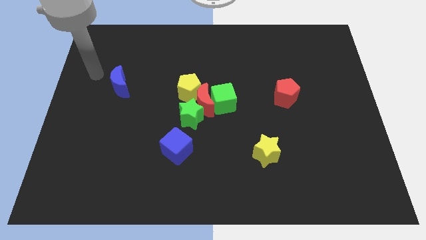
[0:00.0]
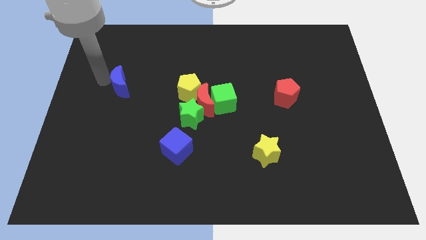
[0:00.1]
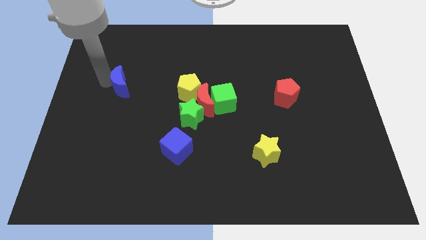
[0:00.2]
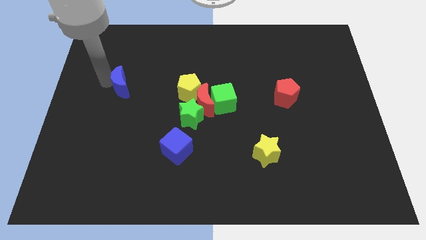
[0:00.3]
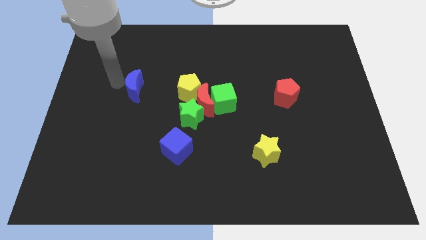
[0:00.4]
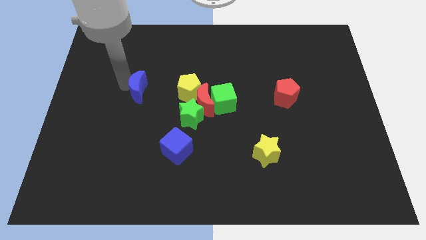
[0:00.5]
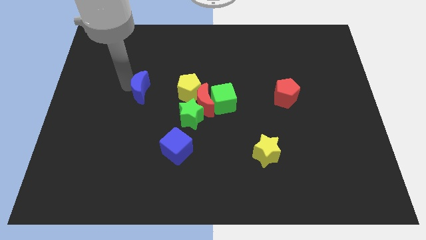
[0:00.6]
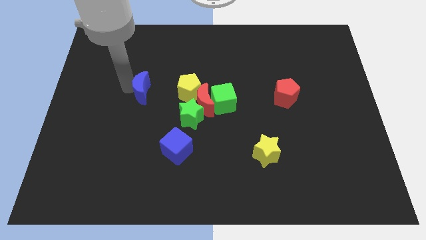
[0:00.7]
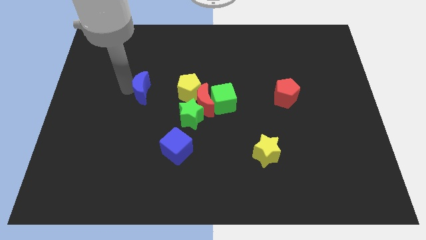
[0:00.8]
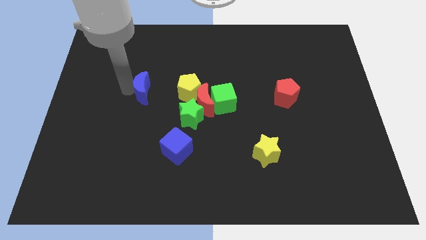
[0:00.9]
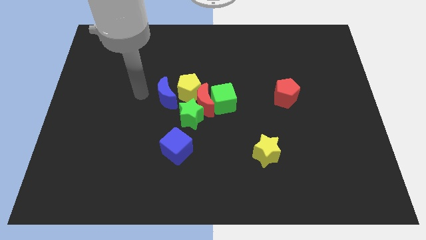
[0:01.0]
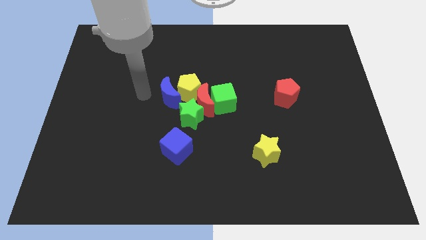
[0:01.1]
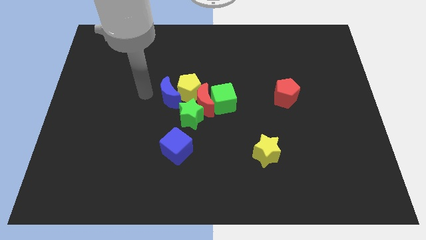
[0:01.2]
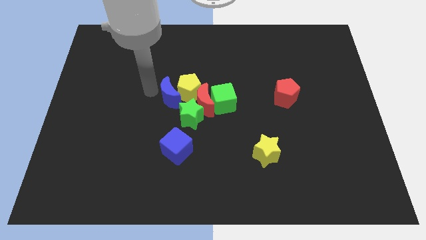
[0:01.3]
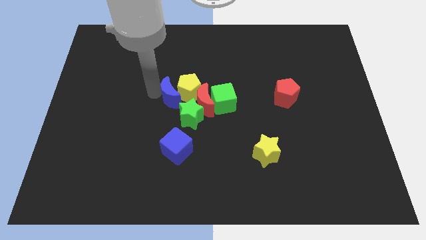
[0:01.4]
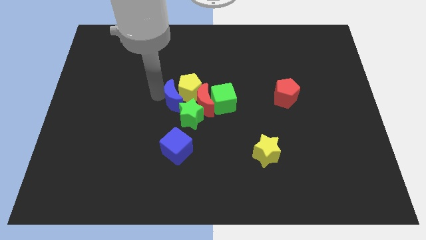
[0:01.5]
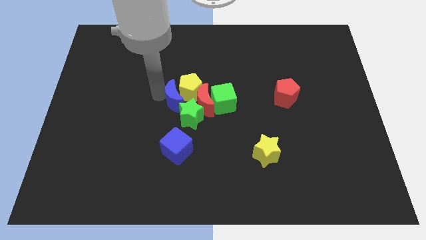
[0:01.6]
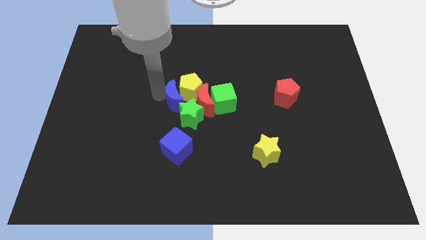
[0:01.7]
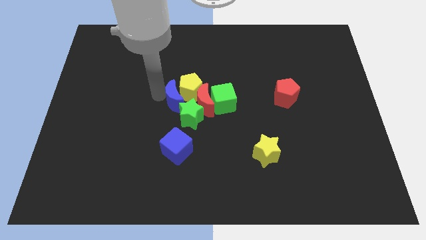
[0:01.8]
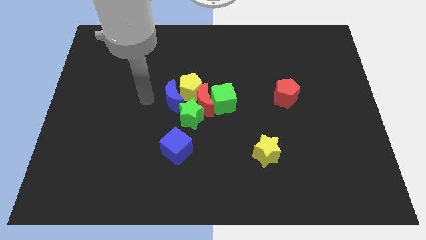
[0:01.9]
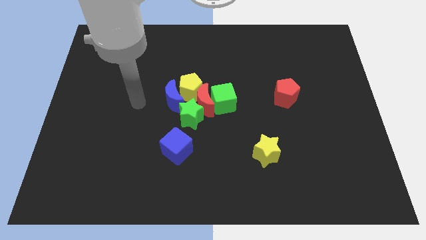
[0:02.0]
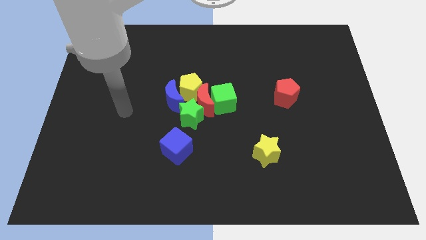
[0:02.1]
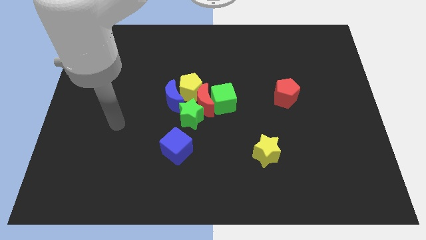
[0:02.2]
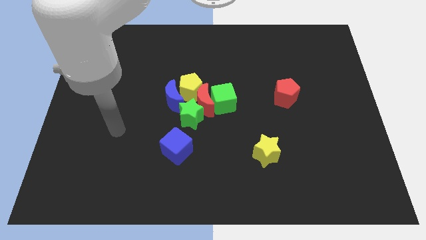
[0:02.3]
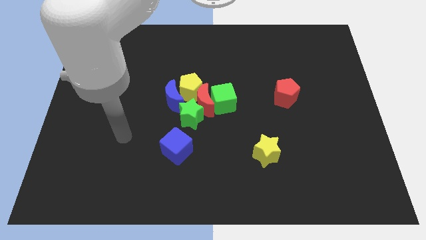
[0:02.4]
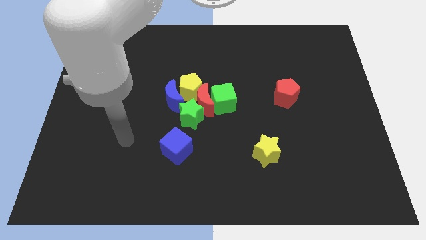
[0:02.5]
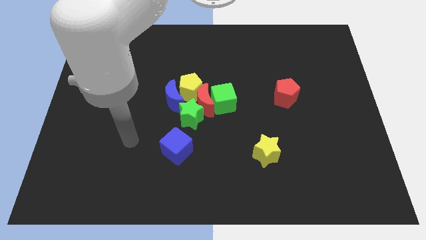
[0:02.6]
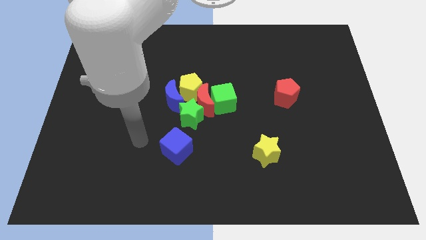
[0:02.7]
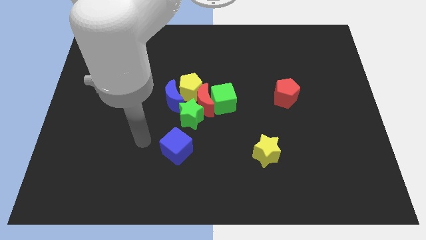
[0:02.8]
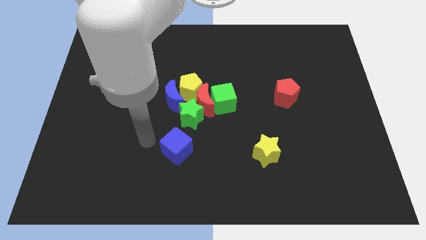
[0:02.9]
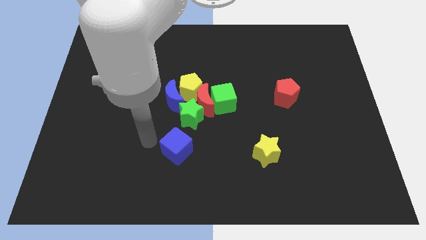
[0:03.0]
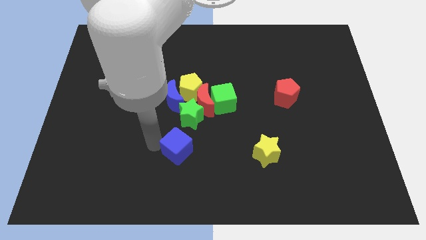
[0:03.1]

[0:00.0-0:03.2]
push the blue moon into the yellow pentagon

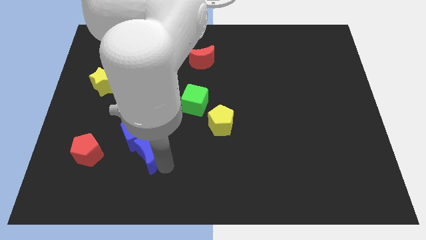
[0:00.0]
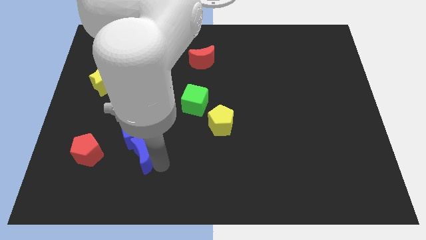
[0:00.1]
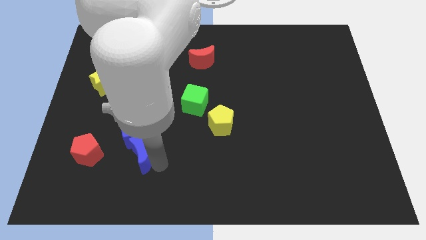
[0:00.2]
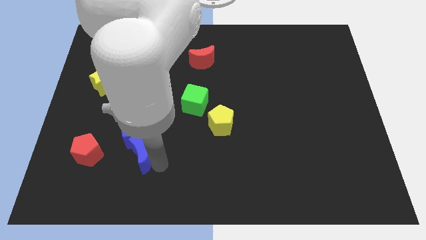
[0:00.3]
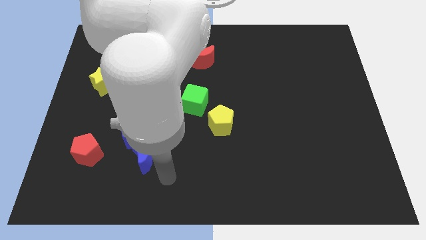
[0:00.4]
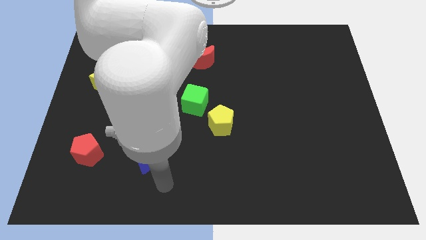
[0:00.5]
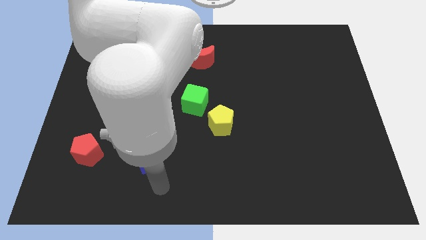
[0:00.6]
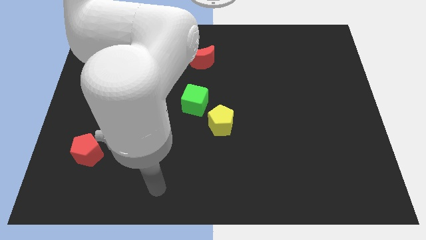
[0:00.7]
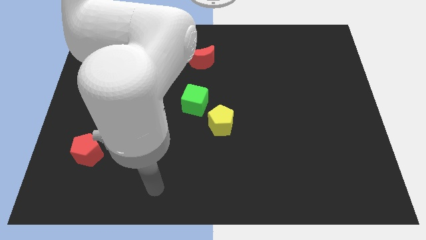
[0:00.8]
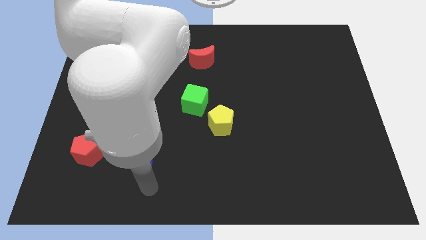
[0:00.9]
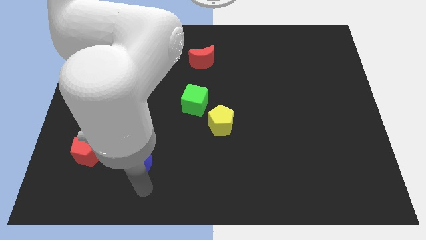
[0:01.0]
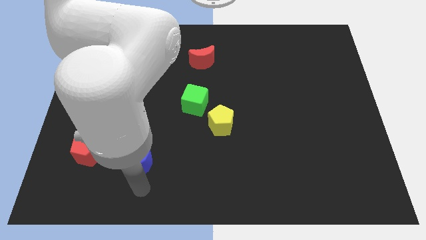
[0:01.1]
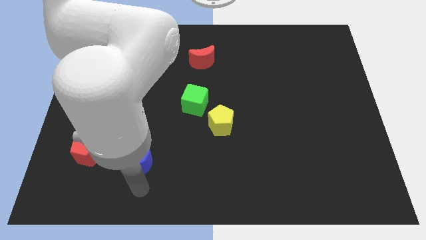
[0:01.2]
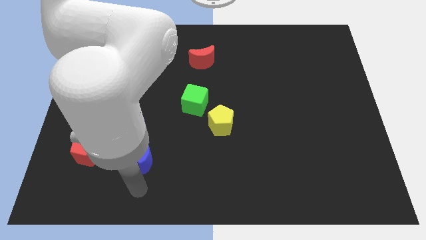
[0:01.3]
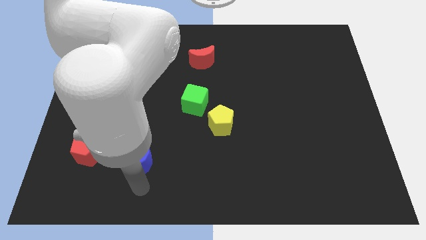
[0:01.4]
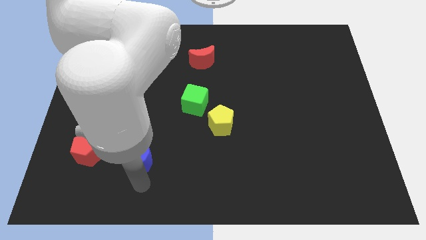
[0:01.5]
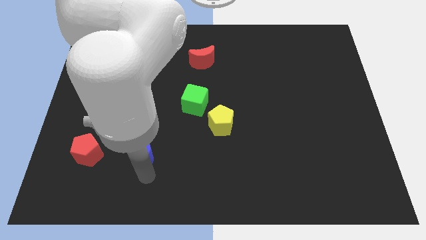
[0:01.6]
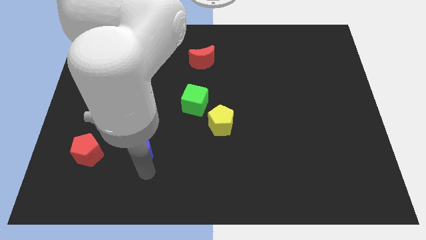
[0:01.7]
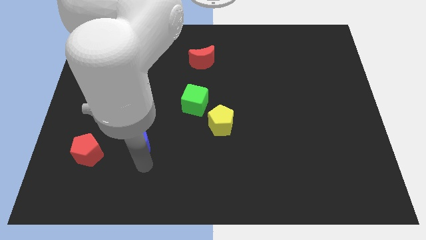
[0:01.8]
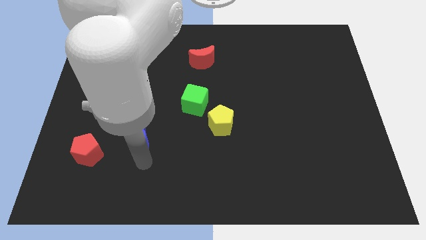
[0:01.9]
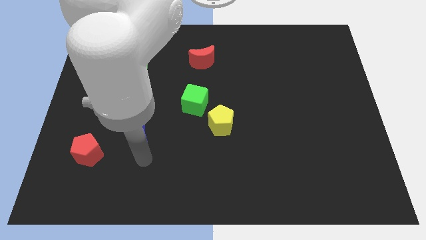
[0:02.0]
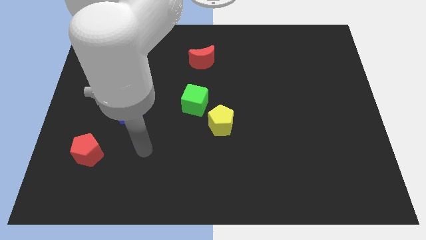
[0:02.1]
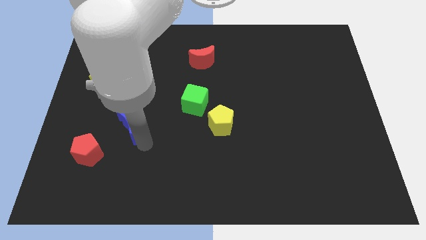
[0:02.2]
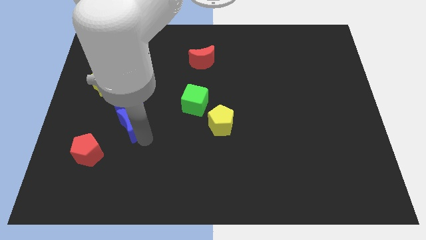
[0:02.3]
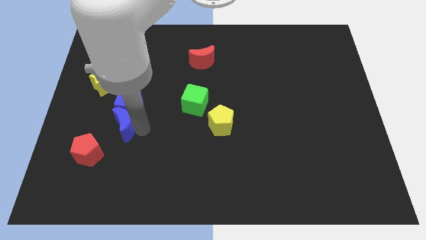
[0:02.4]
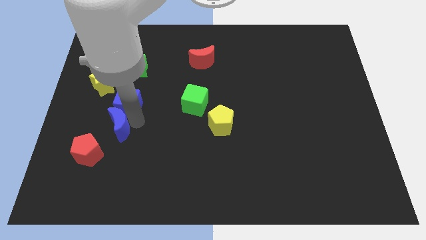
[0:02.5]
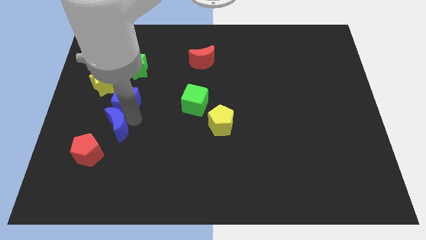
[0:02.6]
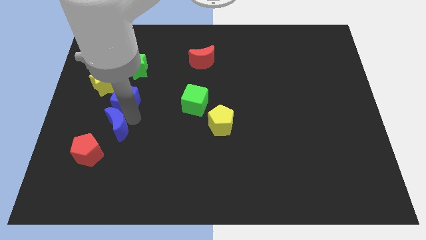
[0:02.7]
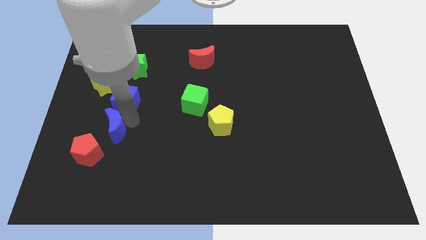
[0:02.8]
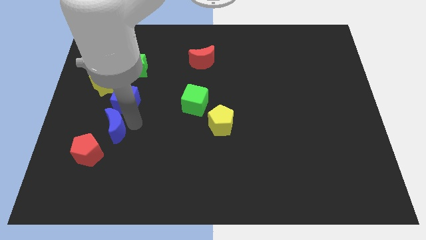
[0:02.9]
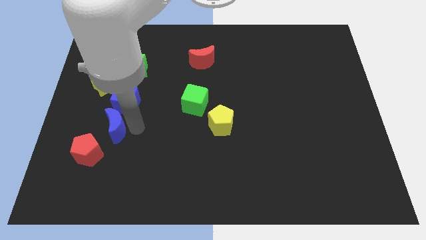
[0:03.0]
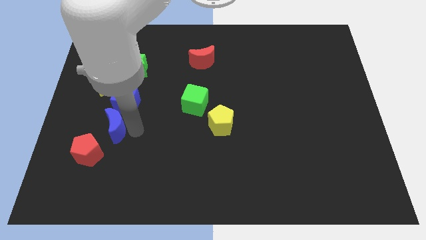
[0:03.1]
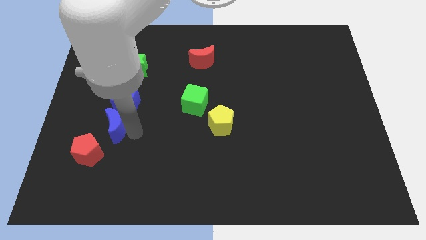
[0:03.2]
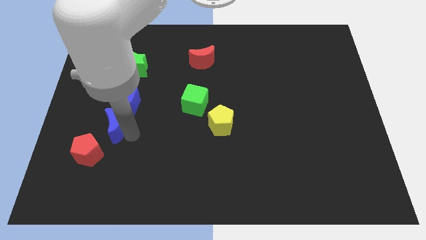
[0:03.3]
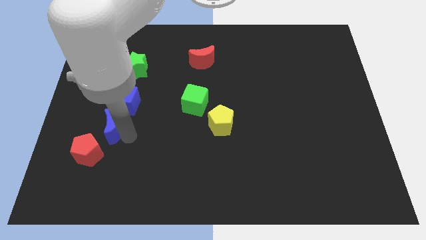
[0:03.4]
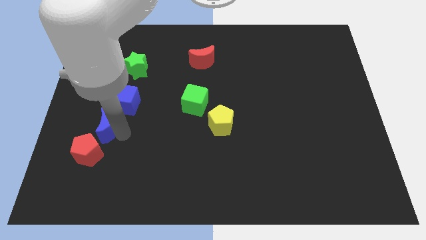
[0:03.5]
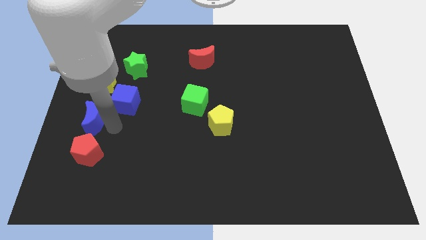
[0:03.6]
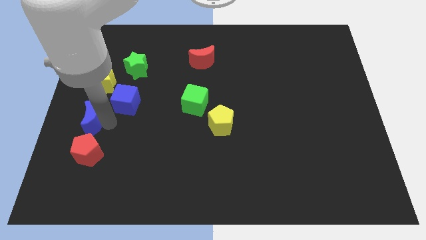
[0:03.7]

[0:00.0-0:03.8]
move the blue moon above to the red pentagon

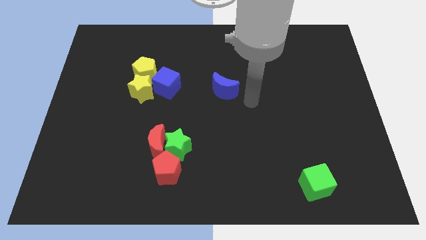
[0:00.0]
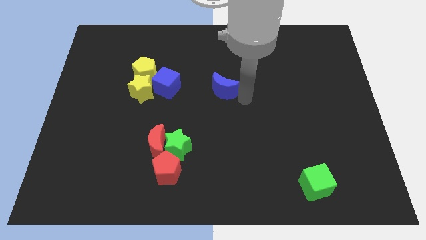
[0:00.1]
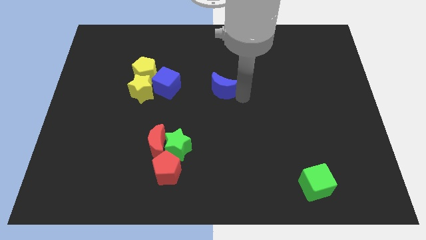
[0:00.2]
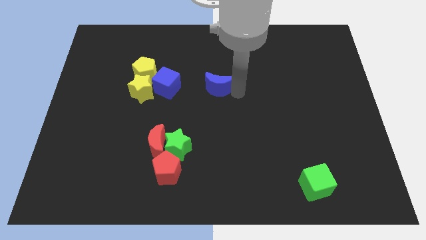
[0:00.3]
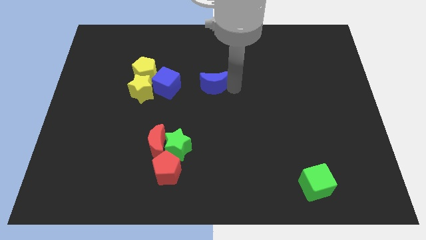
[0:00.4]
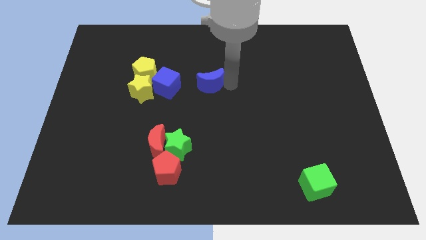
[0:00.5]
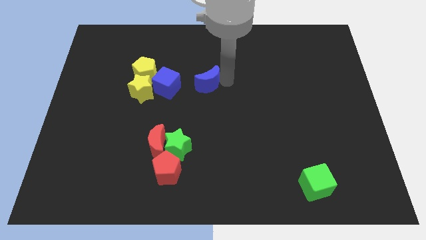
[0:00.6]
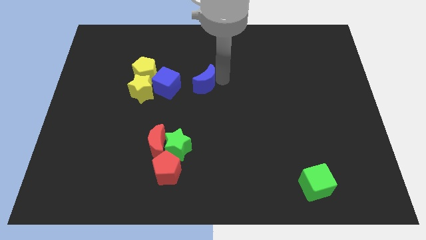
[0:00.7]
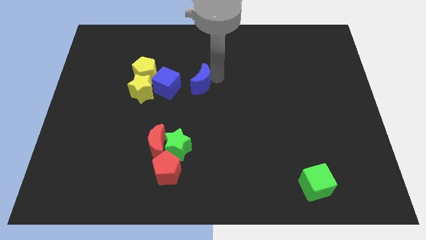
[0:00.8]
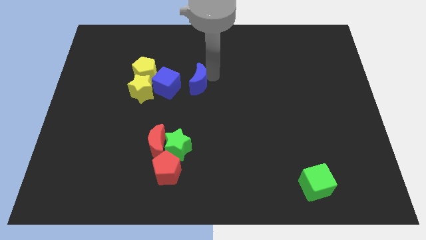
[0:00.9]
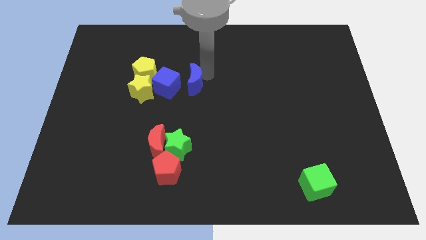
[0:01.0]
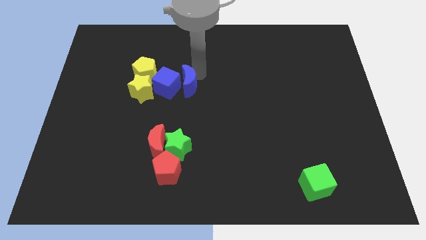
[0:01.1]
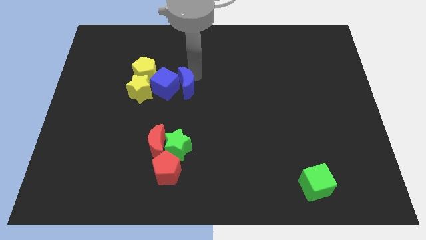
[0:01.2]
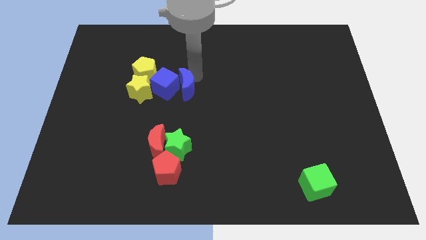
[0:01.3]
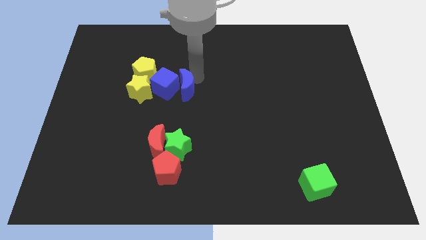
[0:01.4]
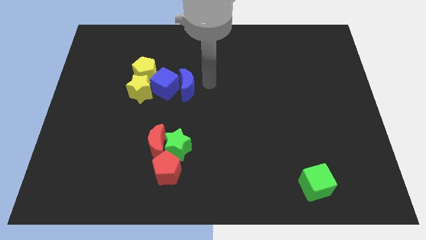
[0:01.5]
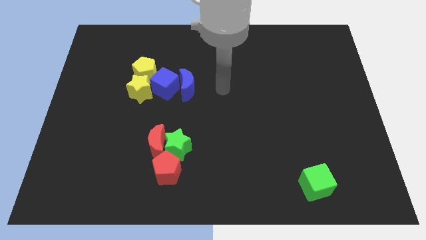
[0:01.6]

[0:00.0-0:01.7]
move the blue crescent into the blue cube
